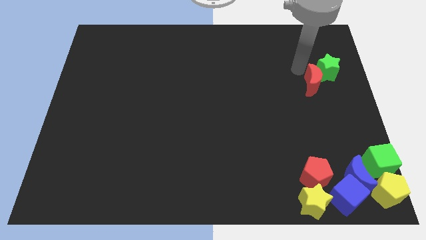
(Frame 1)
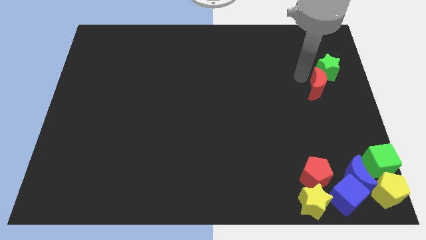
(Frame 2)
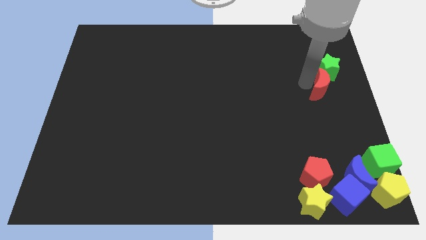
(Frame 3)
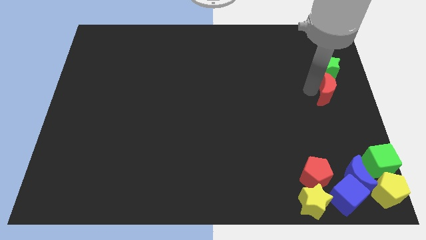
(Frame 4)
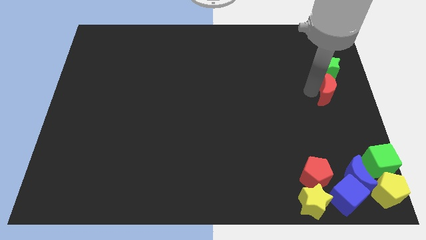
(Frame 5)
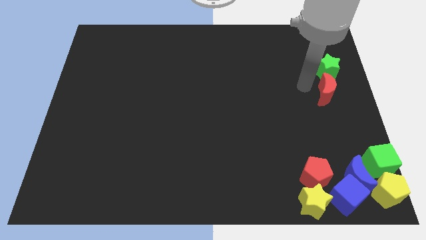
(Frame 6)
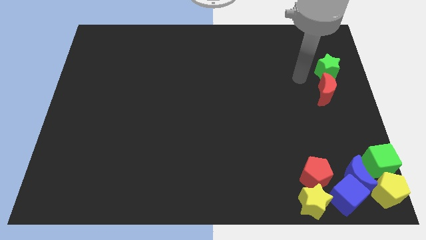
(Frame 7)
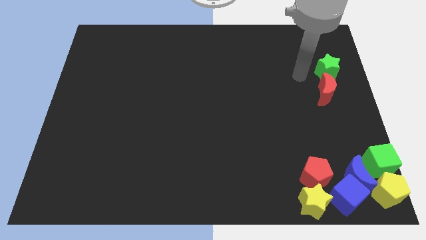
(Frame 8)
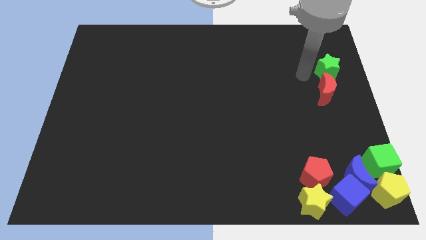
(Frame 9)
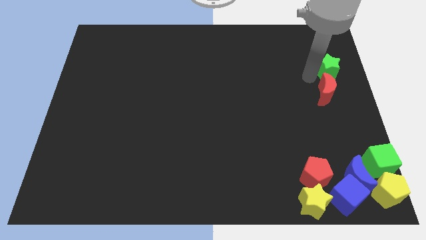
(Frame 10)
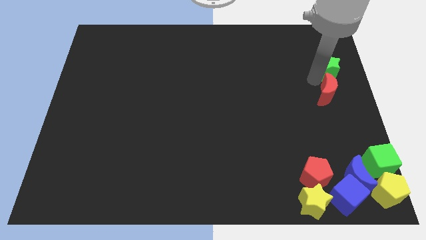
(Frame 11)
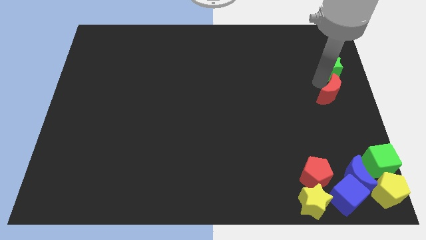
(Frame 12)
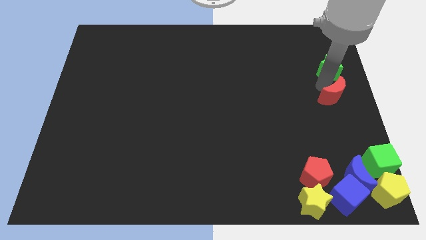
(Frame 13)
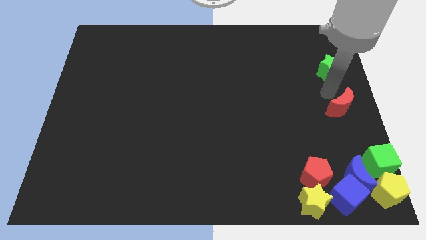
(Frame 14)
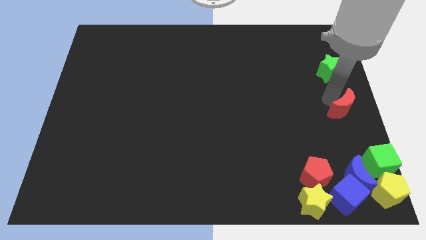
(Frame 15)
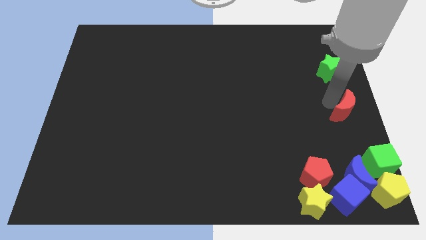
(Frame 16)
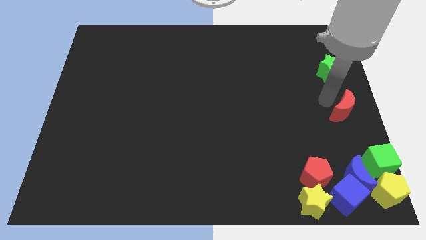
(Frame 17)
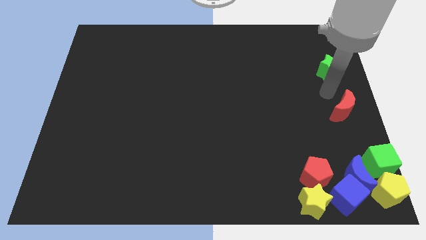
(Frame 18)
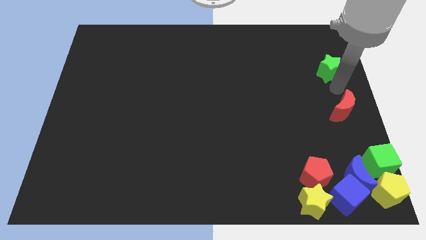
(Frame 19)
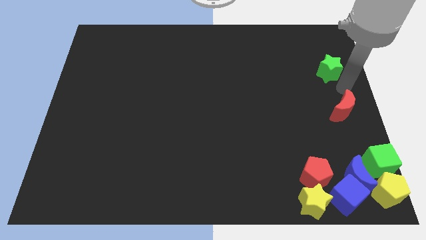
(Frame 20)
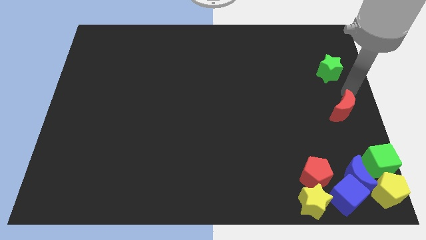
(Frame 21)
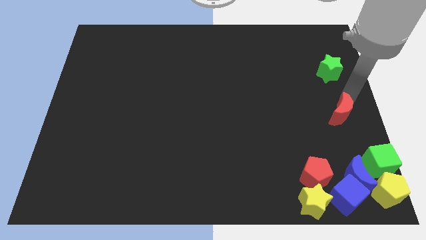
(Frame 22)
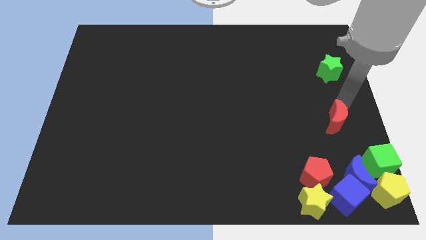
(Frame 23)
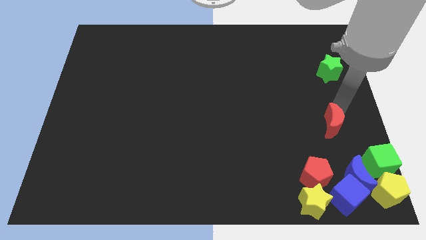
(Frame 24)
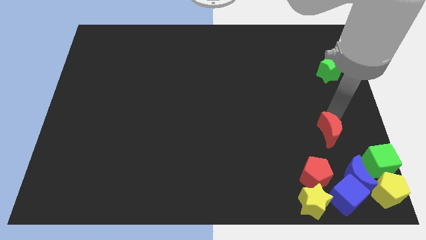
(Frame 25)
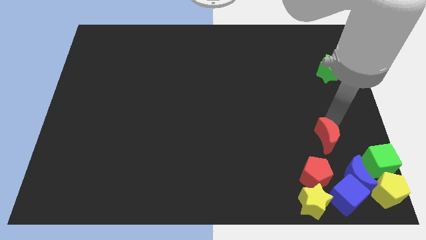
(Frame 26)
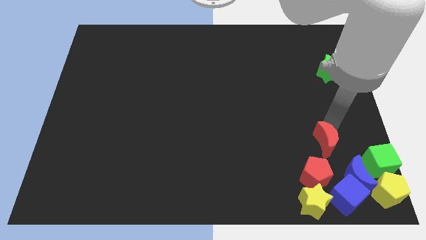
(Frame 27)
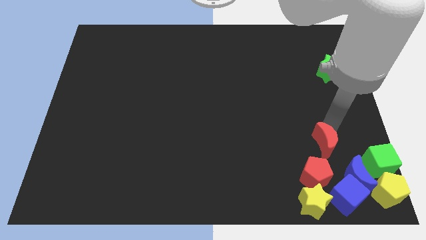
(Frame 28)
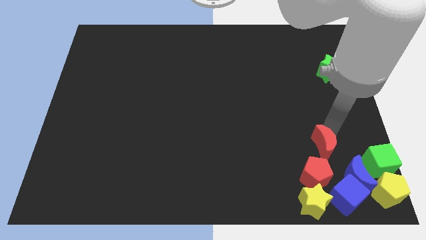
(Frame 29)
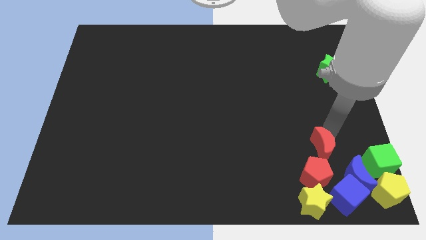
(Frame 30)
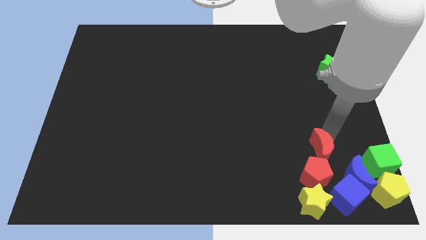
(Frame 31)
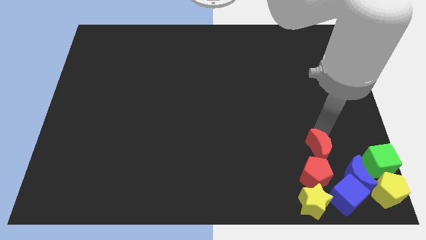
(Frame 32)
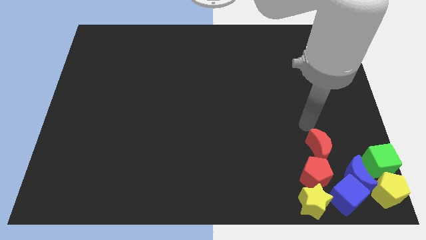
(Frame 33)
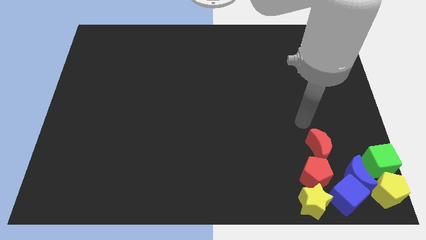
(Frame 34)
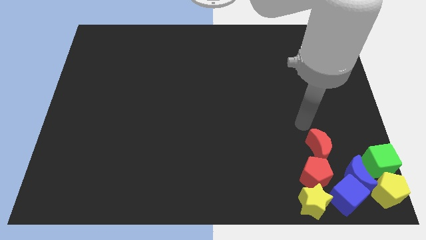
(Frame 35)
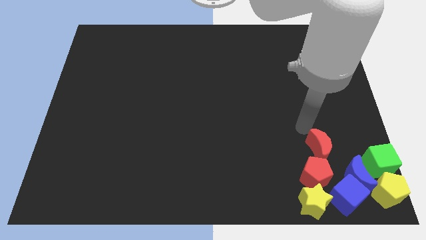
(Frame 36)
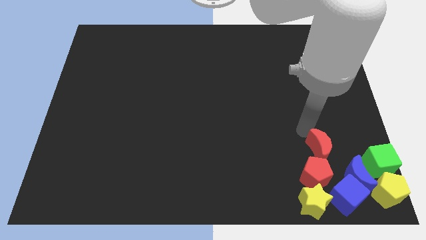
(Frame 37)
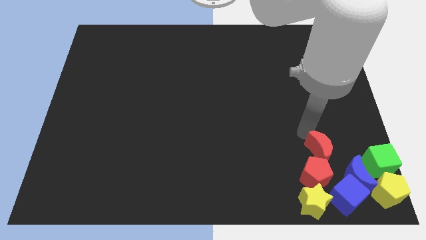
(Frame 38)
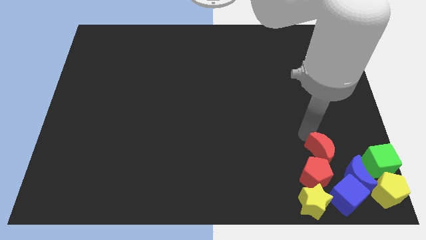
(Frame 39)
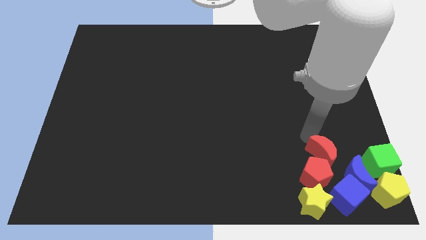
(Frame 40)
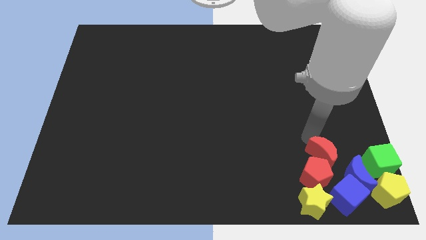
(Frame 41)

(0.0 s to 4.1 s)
put the red crescent to the top right side of the red pentagon

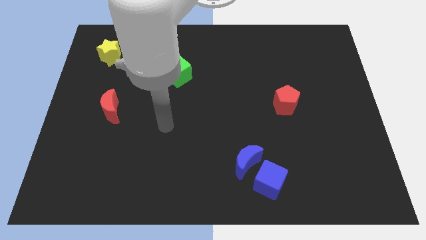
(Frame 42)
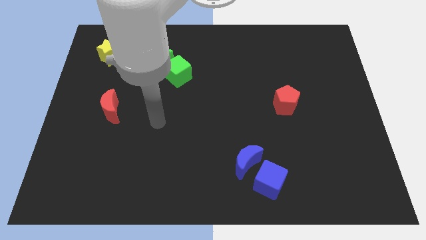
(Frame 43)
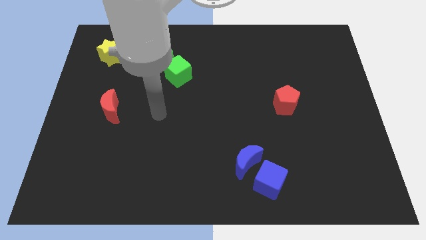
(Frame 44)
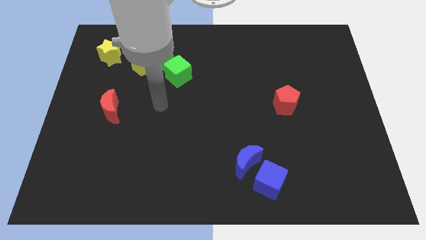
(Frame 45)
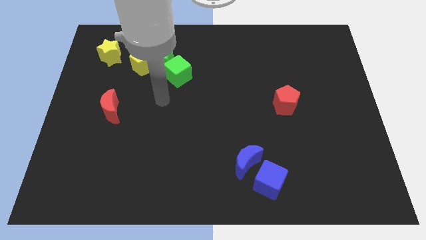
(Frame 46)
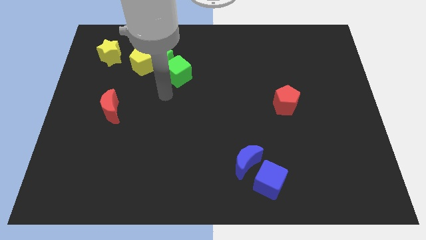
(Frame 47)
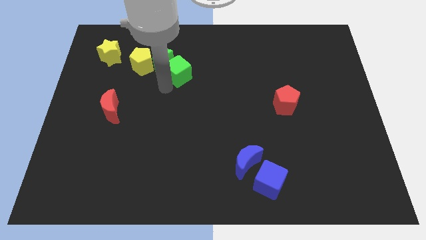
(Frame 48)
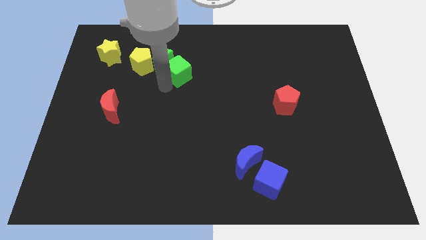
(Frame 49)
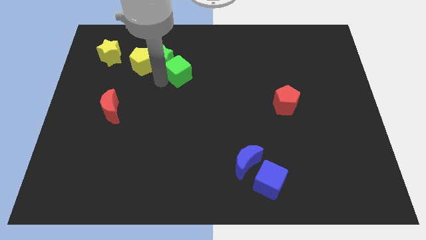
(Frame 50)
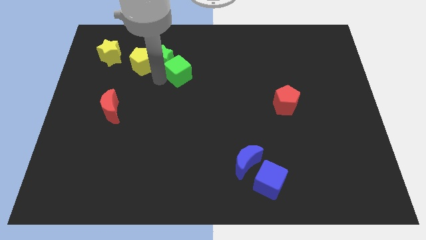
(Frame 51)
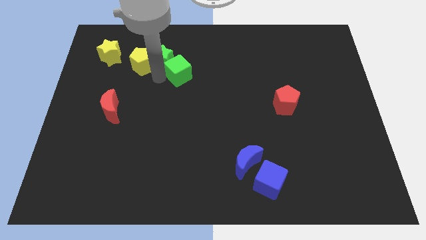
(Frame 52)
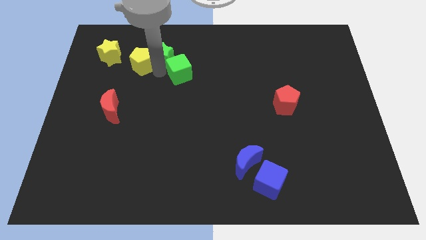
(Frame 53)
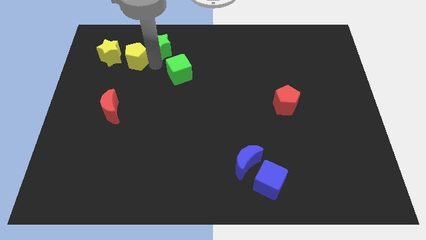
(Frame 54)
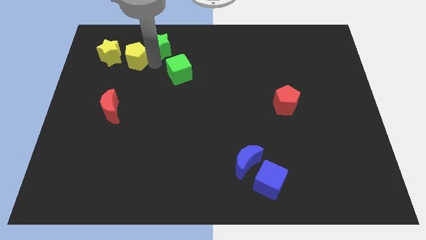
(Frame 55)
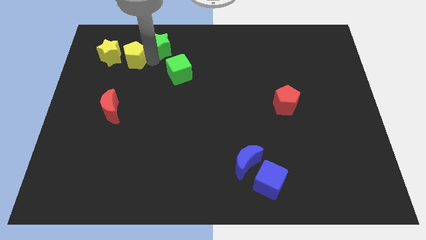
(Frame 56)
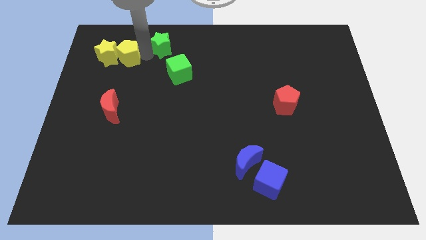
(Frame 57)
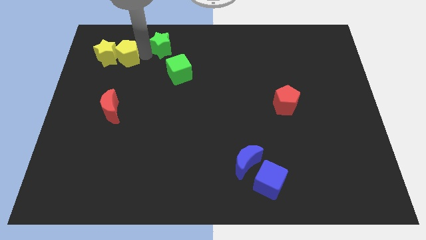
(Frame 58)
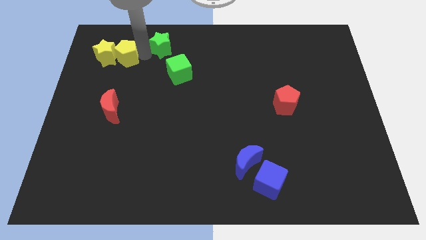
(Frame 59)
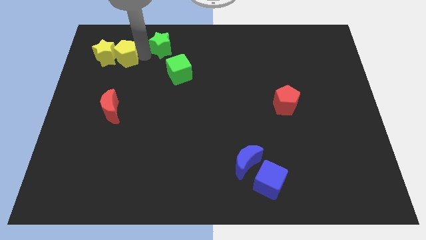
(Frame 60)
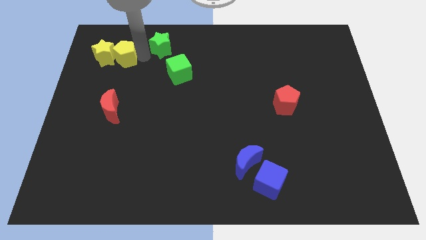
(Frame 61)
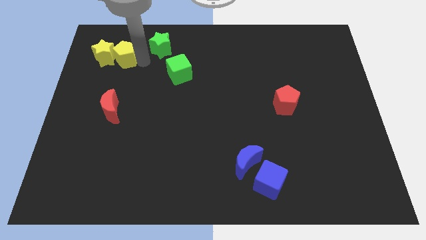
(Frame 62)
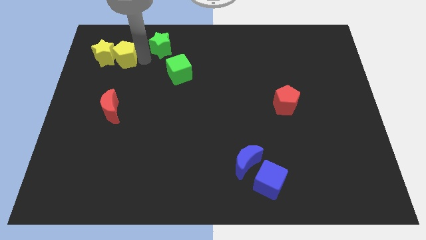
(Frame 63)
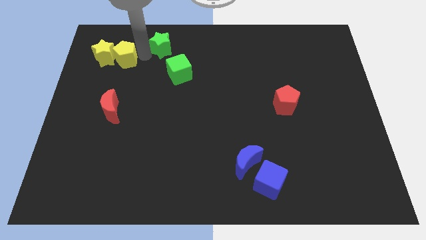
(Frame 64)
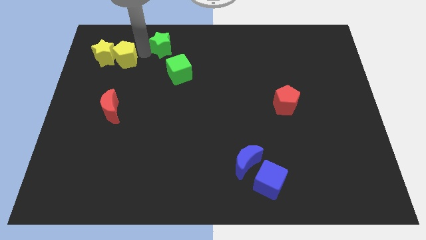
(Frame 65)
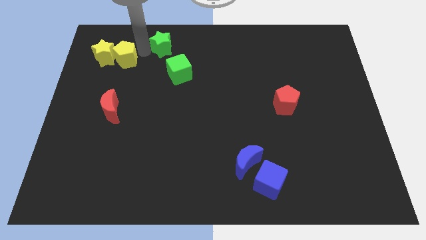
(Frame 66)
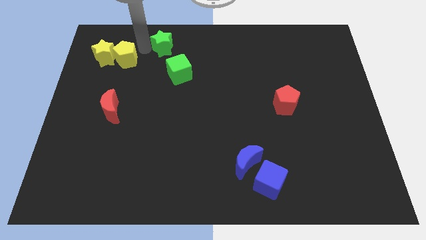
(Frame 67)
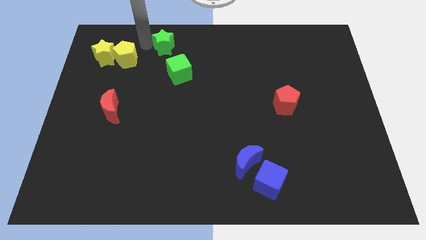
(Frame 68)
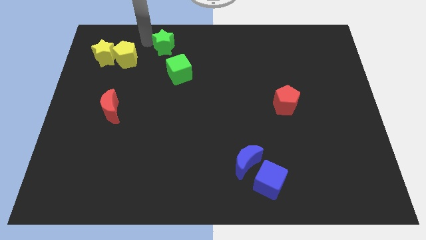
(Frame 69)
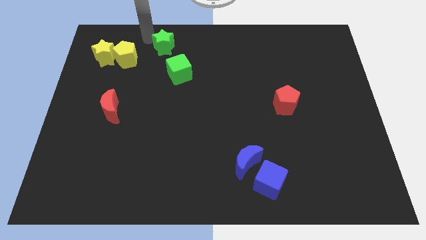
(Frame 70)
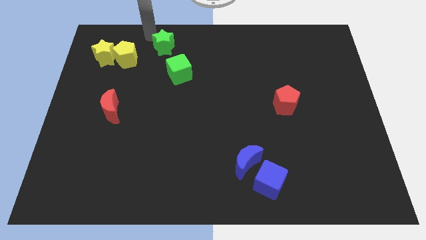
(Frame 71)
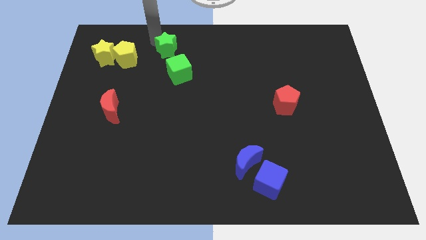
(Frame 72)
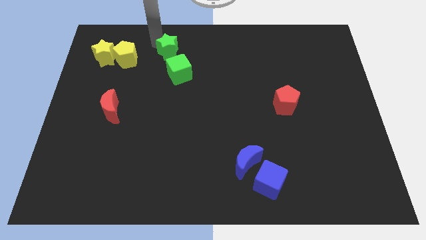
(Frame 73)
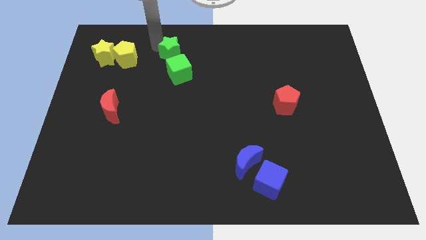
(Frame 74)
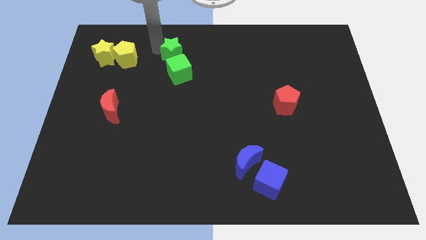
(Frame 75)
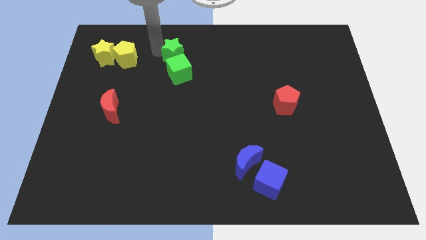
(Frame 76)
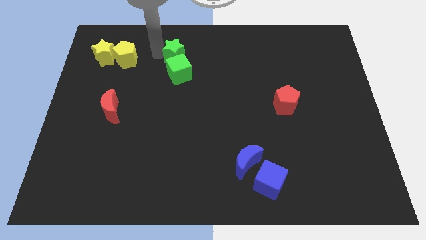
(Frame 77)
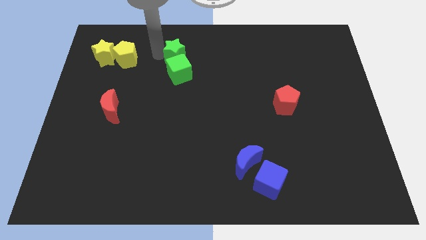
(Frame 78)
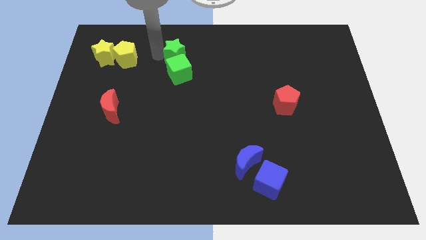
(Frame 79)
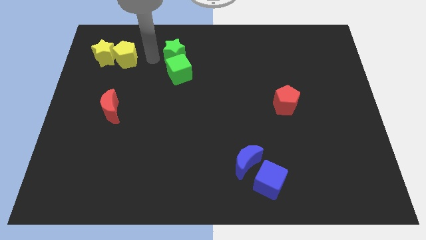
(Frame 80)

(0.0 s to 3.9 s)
group up the yellow and green blocks separately at the top left side of the board

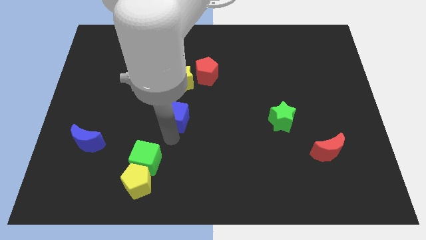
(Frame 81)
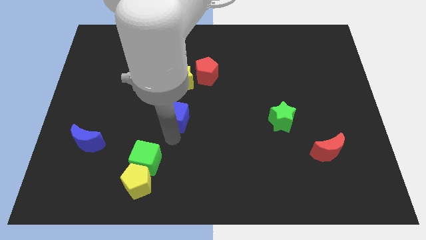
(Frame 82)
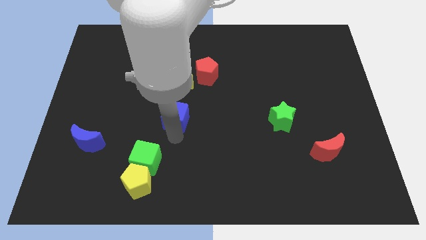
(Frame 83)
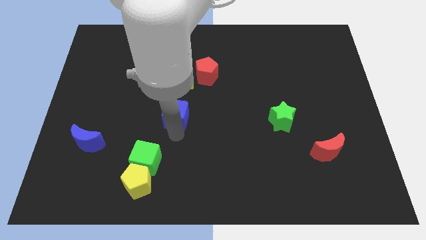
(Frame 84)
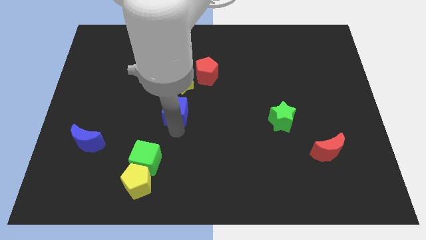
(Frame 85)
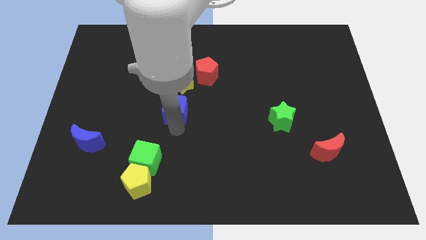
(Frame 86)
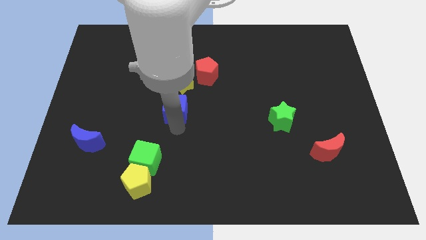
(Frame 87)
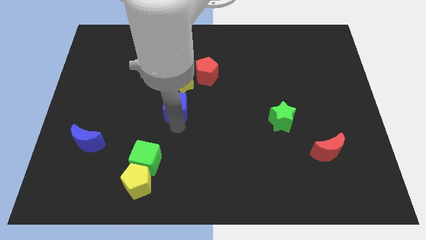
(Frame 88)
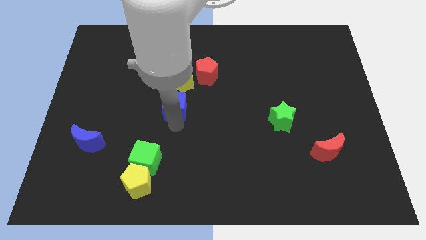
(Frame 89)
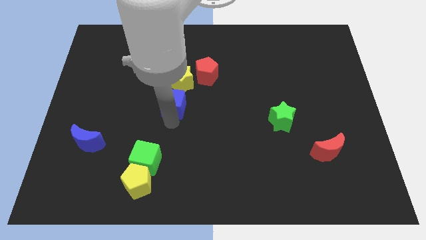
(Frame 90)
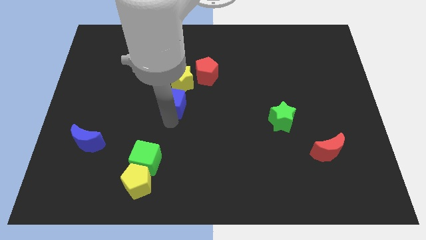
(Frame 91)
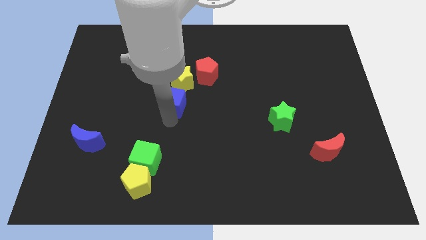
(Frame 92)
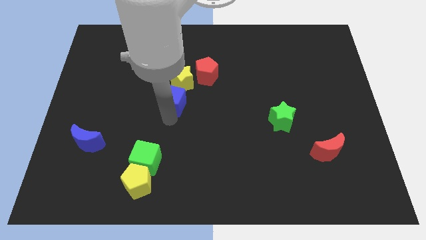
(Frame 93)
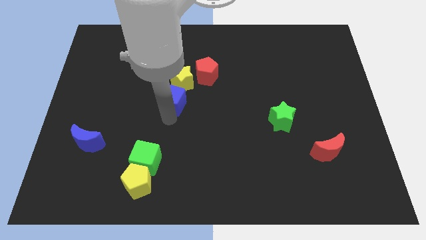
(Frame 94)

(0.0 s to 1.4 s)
move the blue cube close to the yellow star
